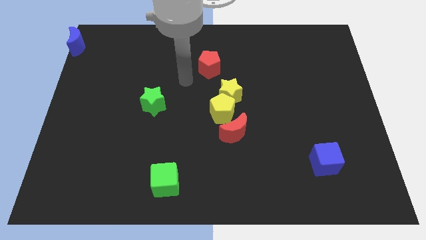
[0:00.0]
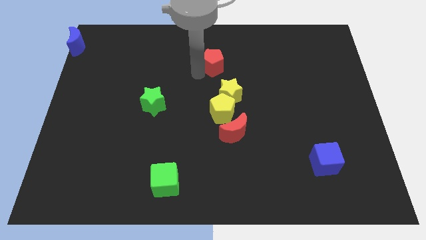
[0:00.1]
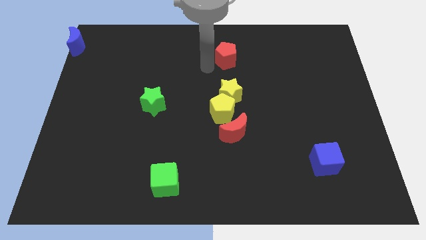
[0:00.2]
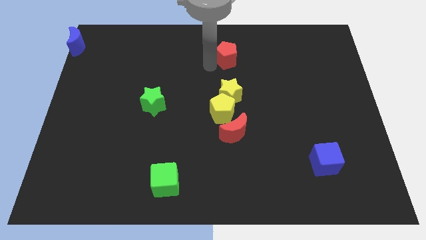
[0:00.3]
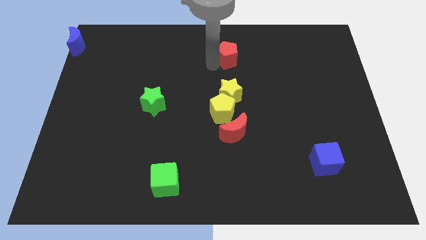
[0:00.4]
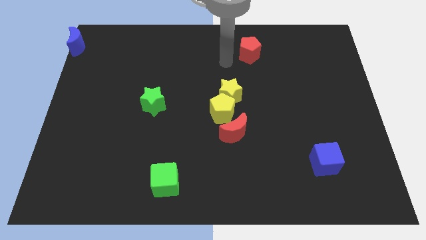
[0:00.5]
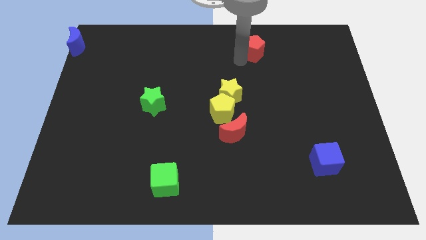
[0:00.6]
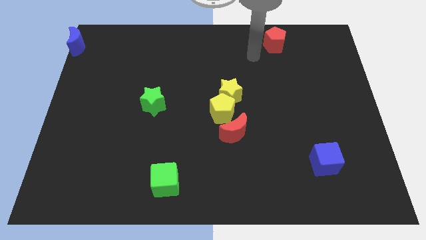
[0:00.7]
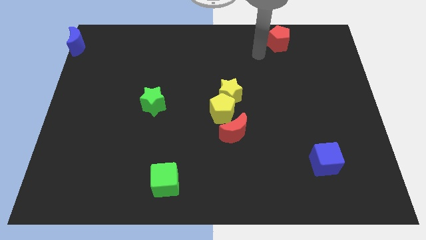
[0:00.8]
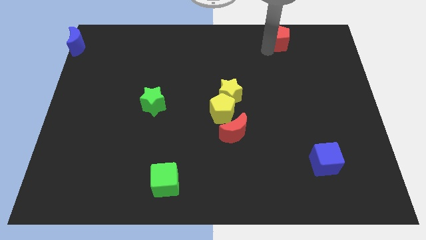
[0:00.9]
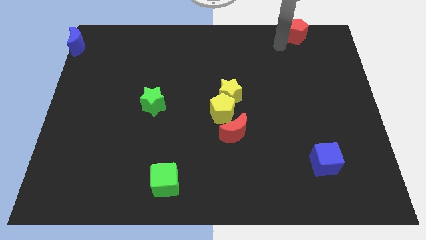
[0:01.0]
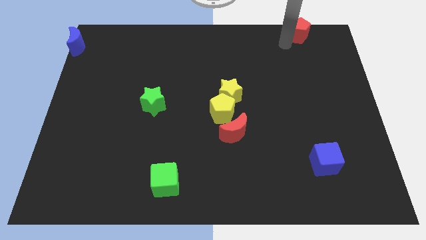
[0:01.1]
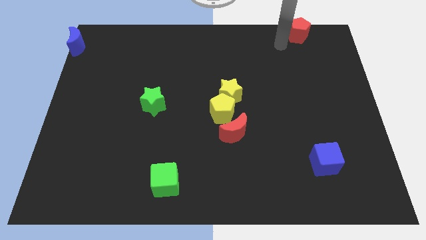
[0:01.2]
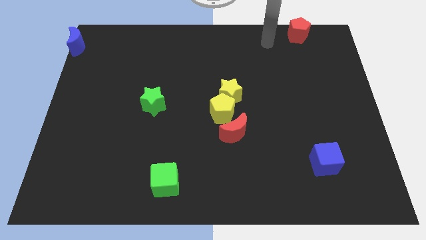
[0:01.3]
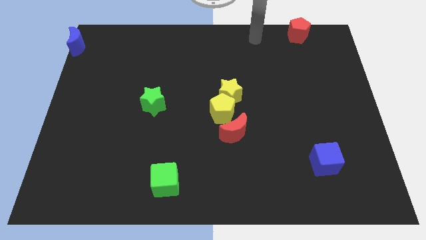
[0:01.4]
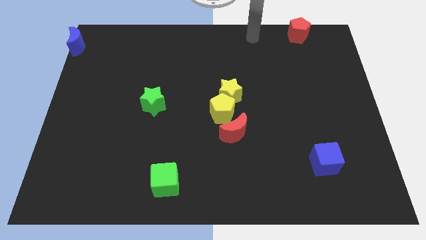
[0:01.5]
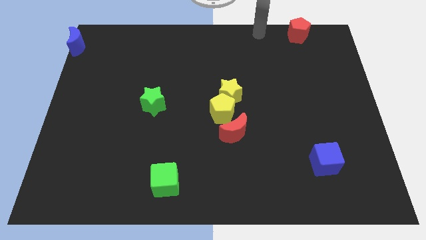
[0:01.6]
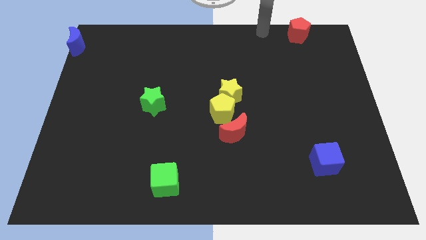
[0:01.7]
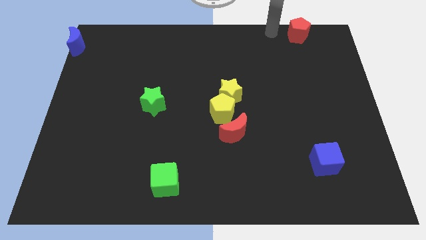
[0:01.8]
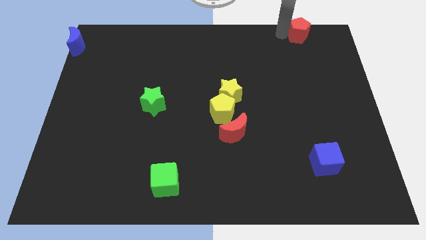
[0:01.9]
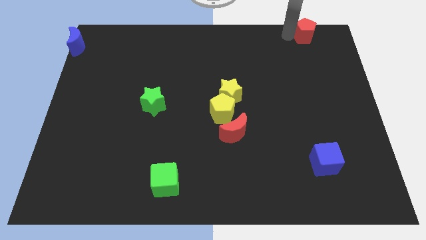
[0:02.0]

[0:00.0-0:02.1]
slide the red pentagon towards the top right

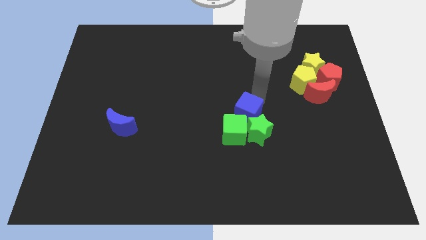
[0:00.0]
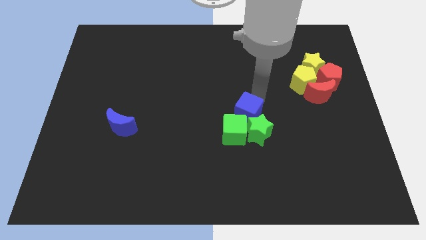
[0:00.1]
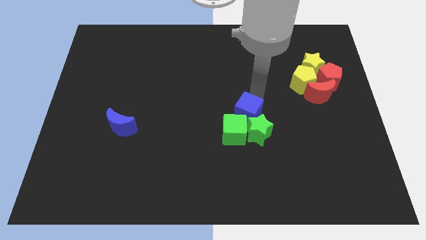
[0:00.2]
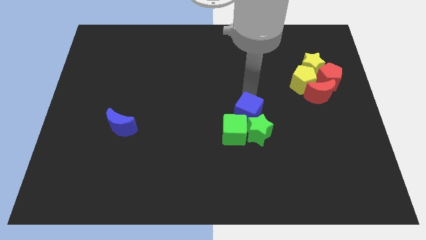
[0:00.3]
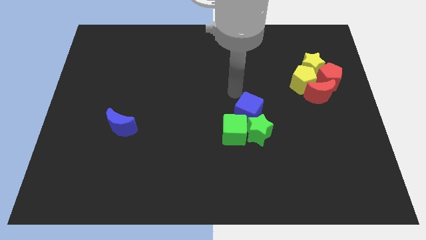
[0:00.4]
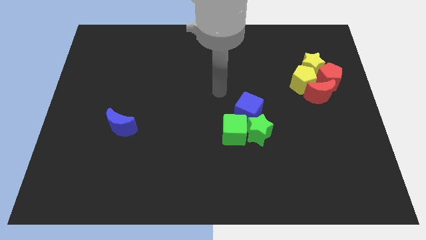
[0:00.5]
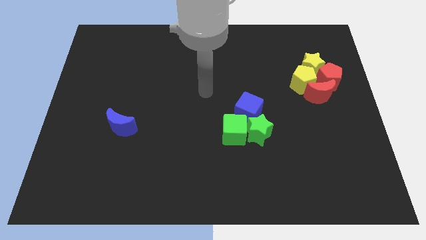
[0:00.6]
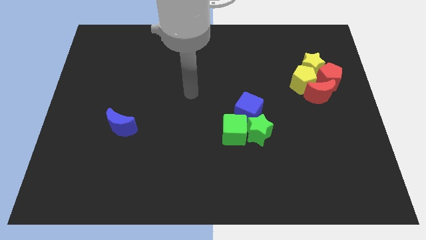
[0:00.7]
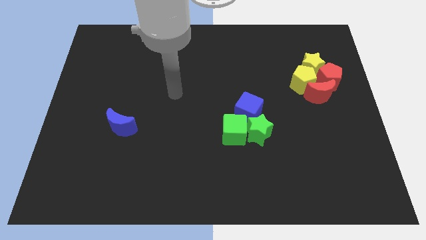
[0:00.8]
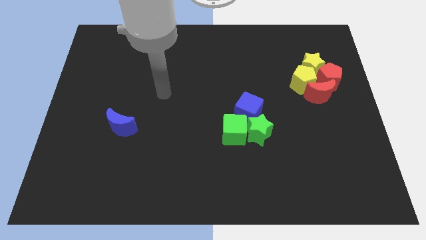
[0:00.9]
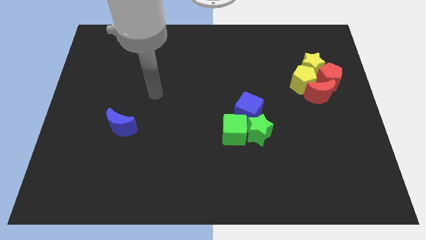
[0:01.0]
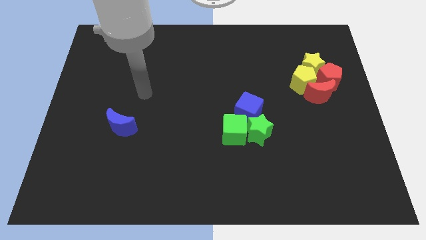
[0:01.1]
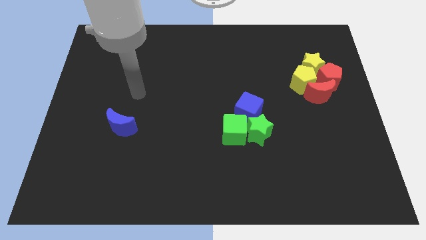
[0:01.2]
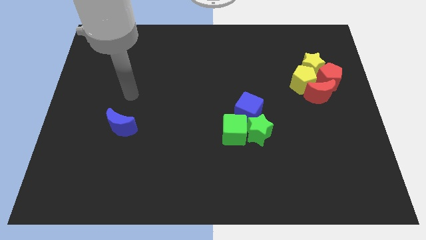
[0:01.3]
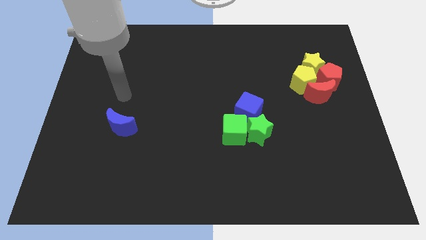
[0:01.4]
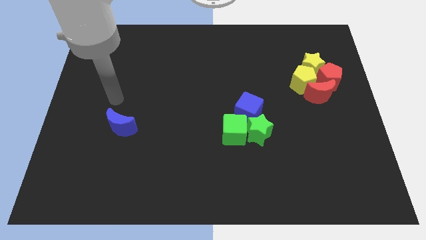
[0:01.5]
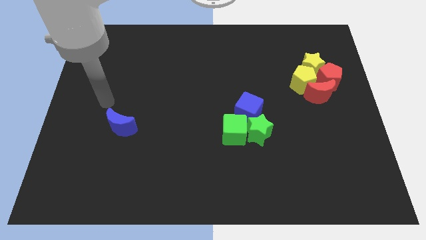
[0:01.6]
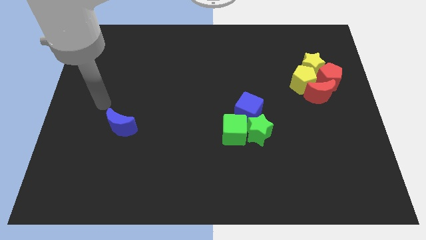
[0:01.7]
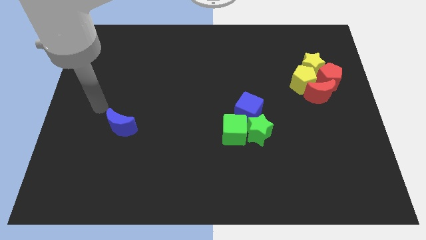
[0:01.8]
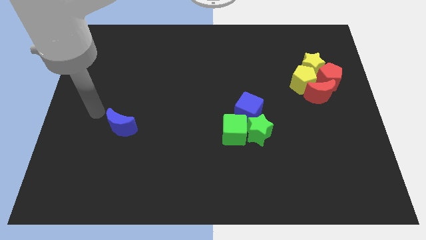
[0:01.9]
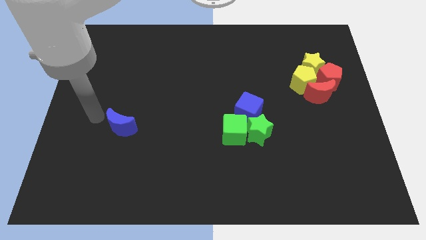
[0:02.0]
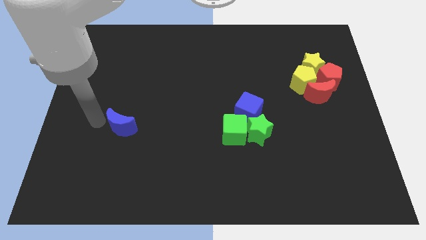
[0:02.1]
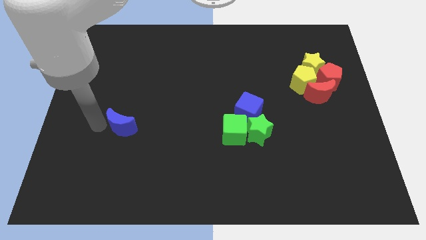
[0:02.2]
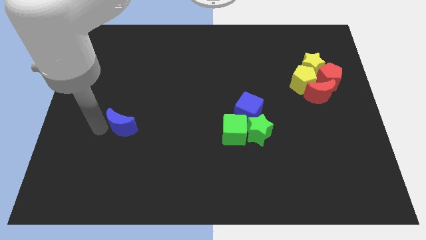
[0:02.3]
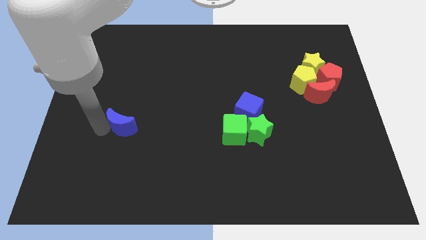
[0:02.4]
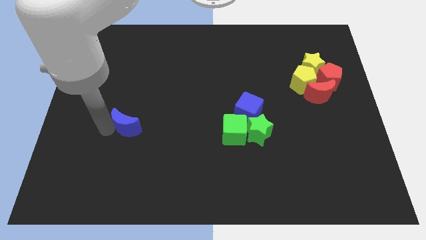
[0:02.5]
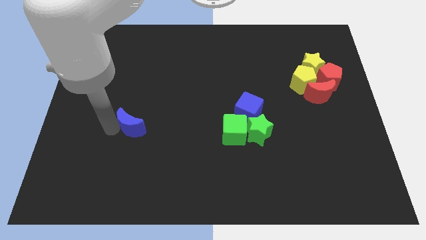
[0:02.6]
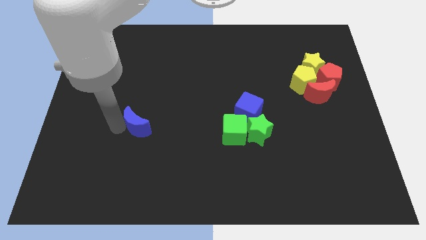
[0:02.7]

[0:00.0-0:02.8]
point your arm left to blue moon

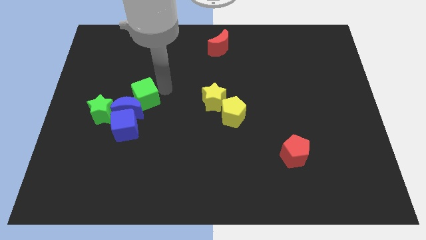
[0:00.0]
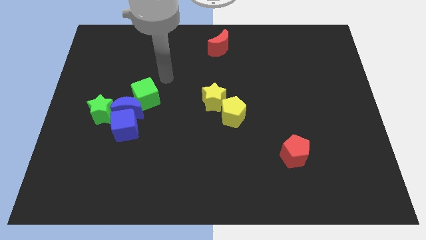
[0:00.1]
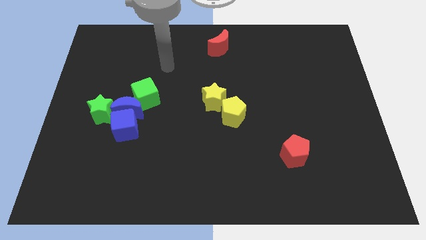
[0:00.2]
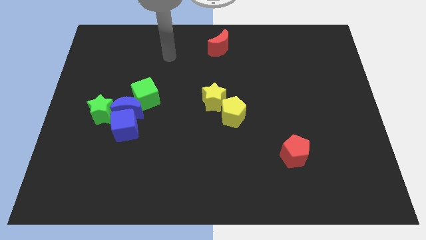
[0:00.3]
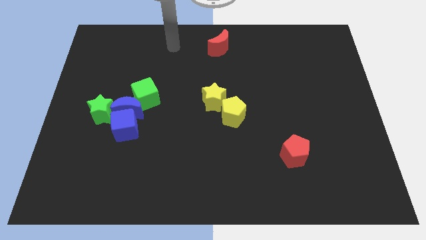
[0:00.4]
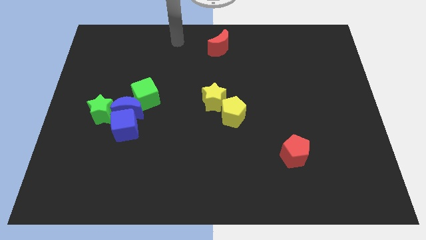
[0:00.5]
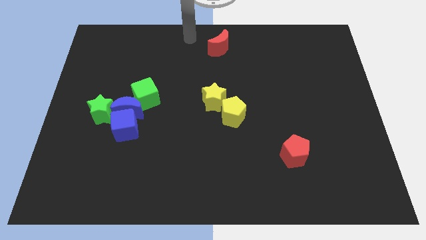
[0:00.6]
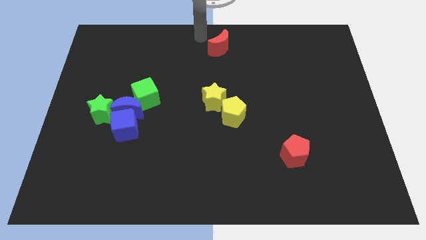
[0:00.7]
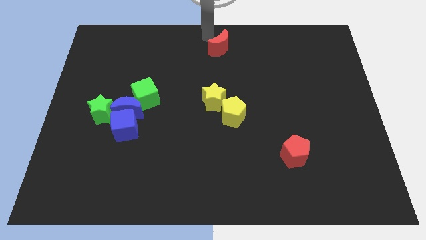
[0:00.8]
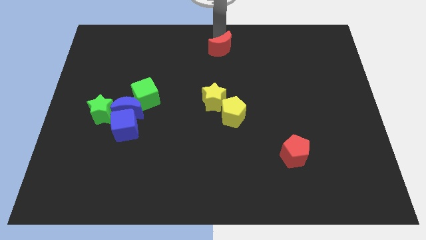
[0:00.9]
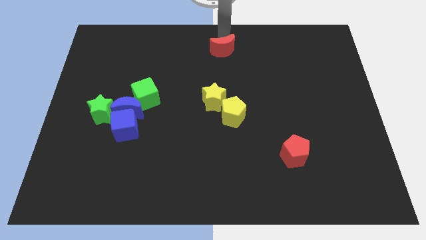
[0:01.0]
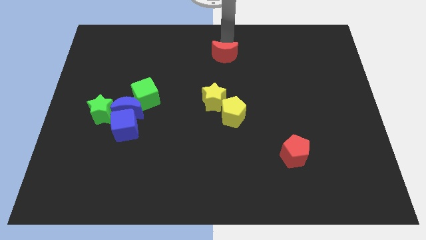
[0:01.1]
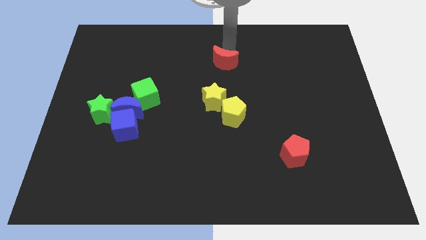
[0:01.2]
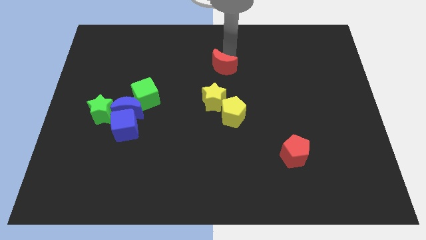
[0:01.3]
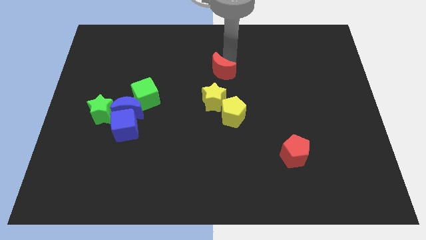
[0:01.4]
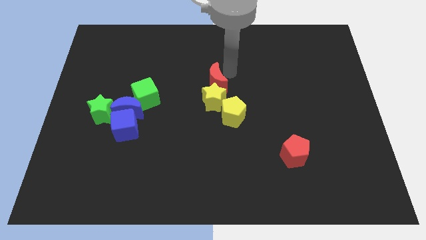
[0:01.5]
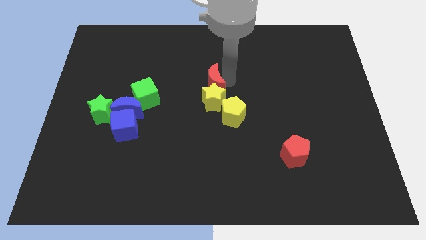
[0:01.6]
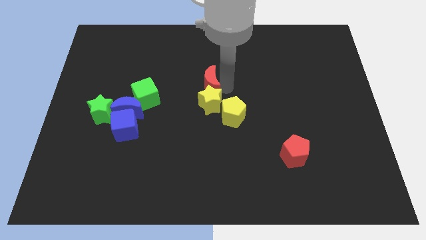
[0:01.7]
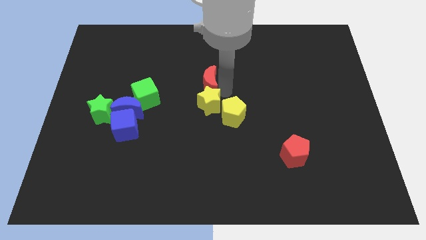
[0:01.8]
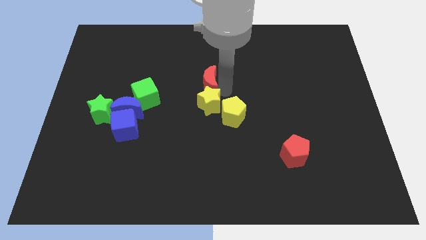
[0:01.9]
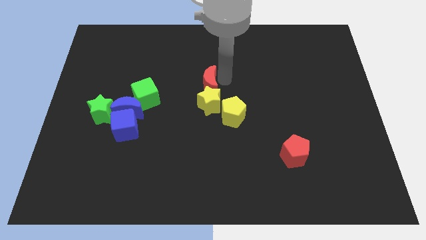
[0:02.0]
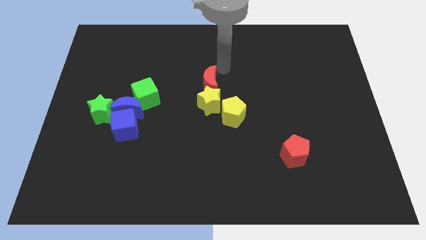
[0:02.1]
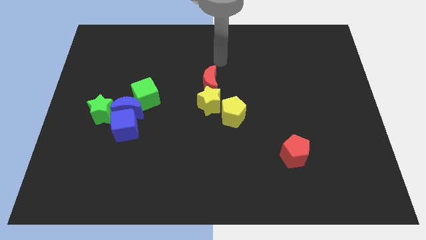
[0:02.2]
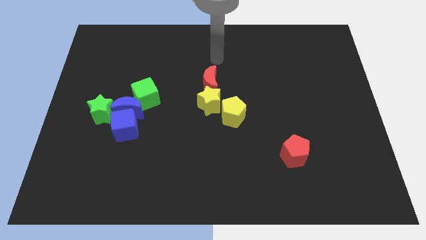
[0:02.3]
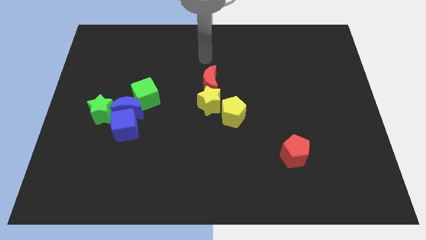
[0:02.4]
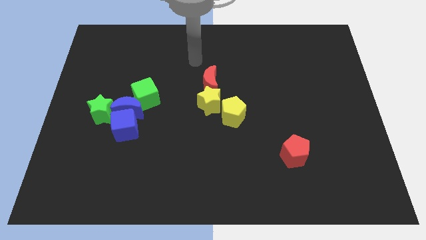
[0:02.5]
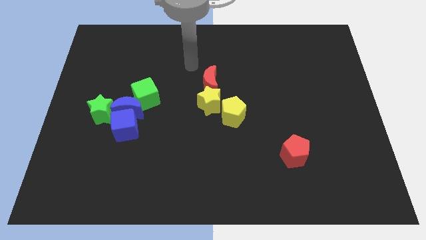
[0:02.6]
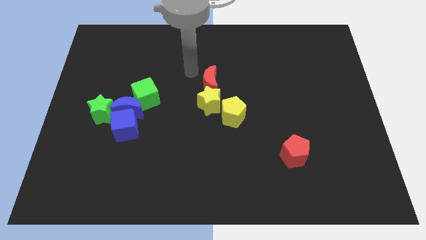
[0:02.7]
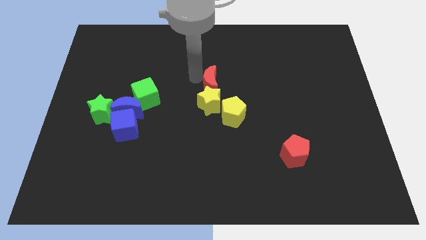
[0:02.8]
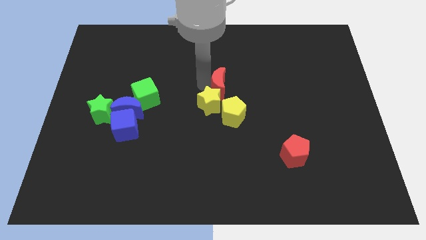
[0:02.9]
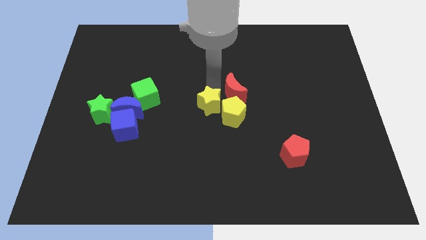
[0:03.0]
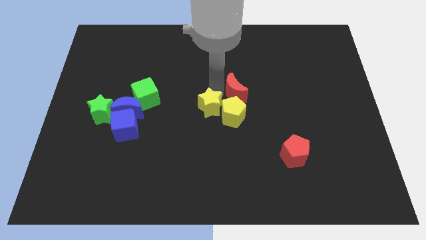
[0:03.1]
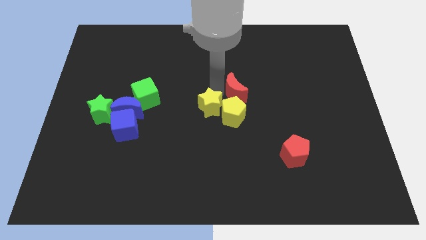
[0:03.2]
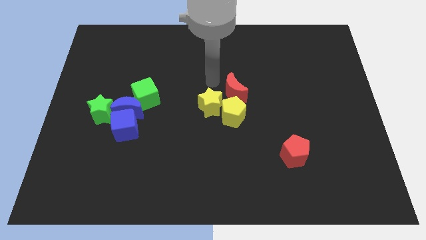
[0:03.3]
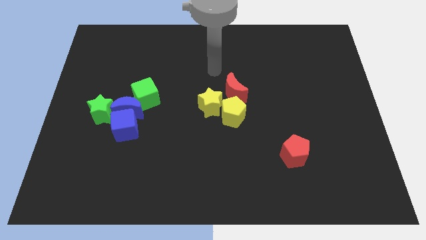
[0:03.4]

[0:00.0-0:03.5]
push the red moon into the yellow star

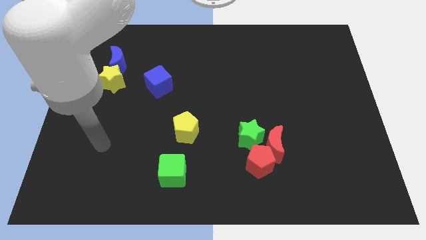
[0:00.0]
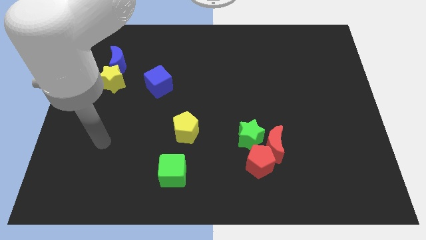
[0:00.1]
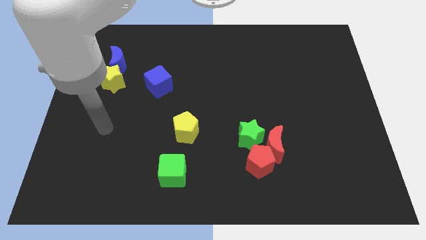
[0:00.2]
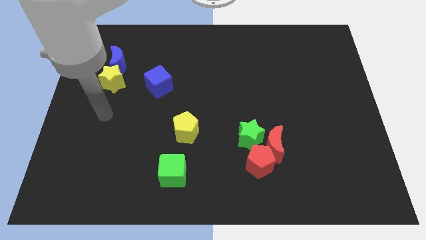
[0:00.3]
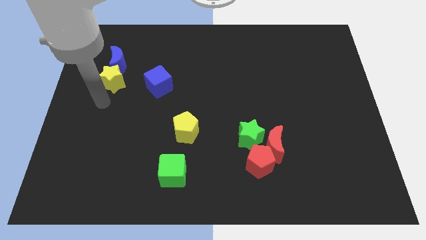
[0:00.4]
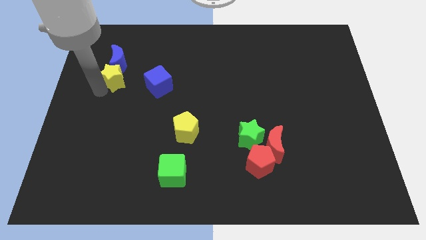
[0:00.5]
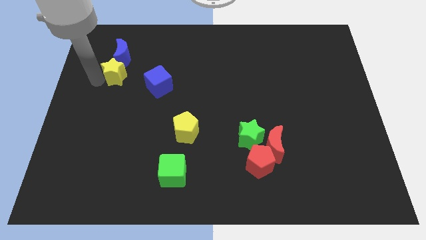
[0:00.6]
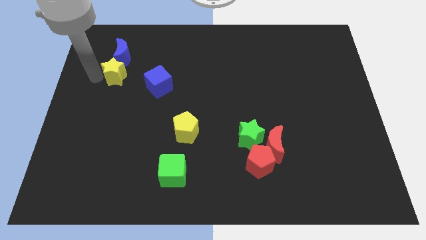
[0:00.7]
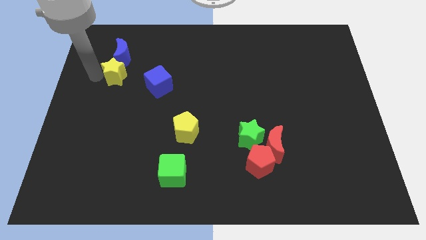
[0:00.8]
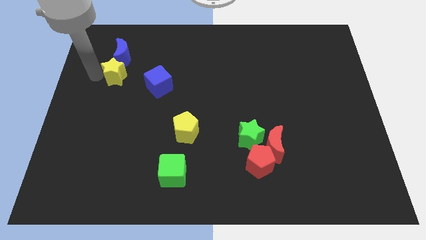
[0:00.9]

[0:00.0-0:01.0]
place your arm at the left side of the yellow star
